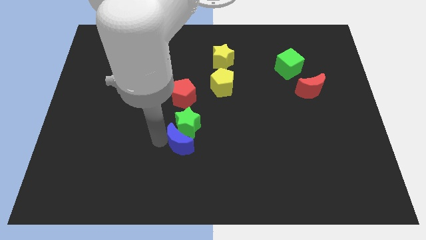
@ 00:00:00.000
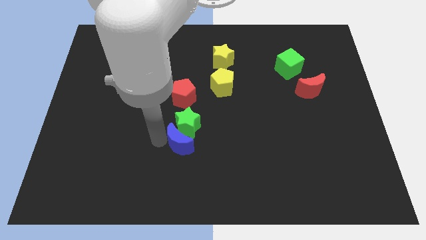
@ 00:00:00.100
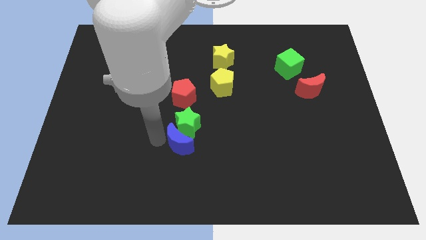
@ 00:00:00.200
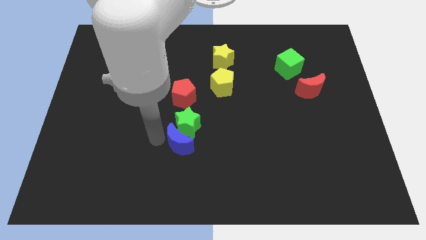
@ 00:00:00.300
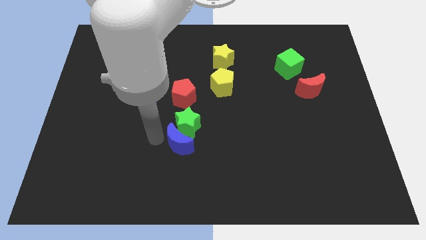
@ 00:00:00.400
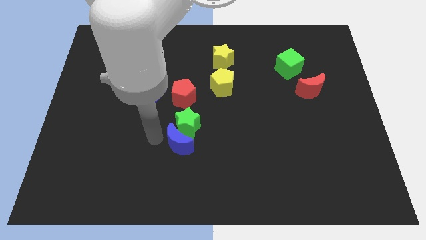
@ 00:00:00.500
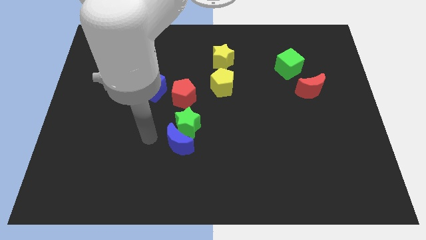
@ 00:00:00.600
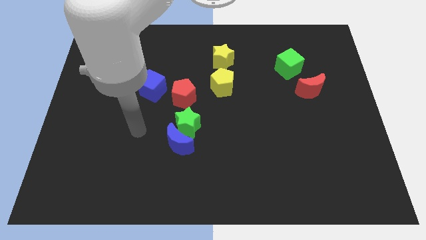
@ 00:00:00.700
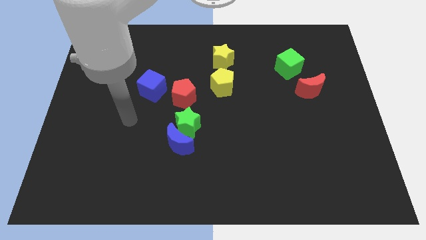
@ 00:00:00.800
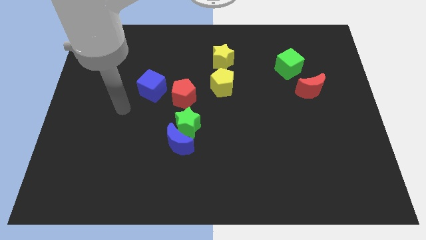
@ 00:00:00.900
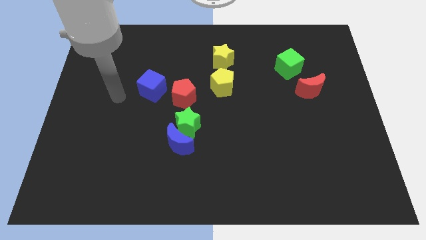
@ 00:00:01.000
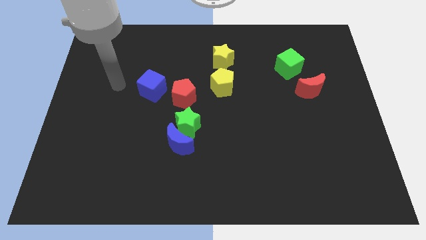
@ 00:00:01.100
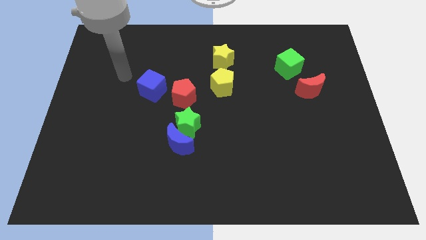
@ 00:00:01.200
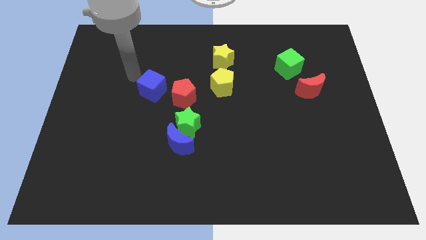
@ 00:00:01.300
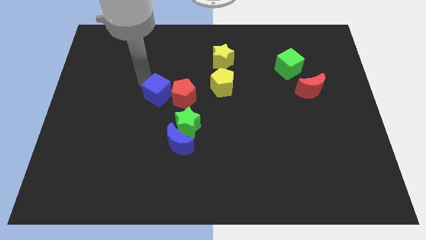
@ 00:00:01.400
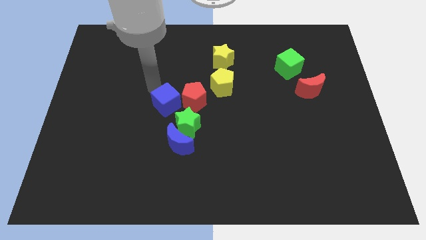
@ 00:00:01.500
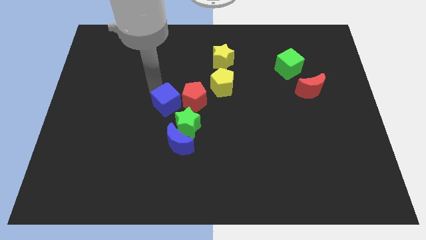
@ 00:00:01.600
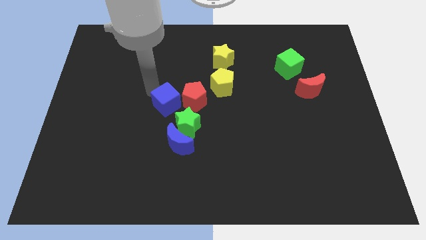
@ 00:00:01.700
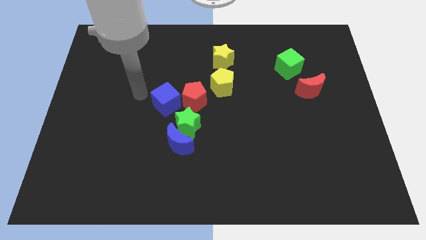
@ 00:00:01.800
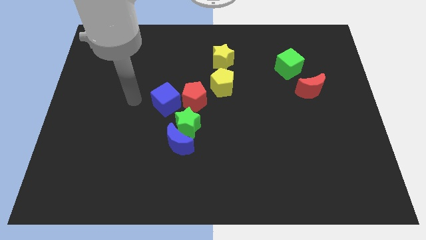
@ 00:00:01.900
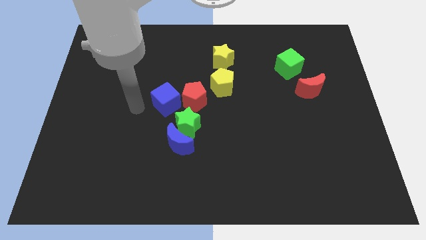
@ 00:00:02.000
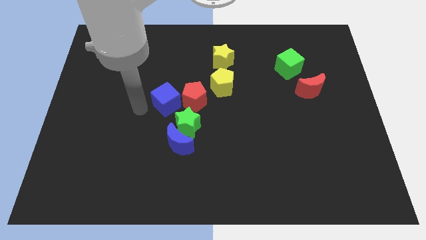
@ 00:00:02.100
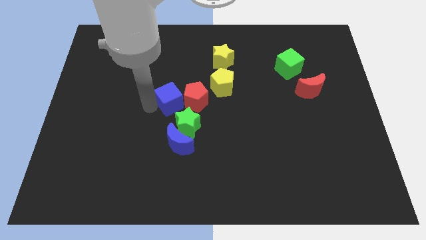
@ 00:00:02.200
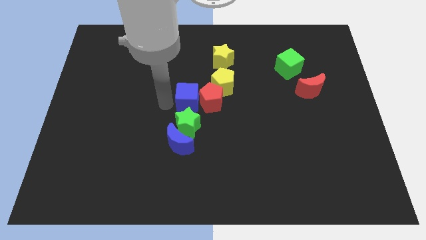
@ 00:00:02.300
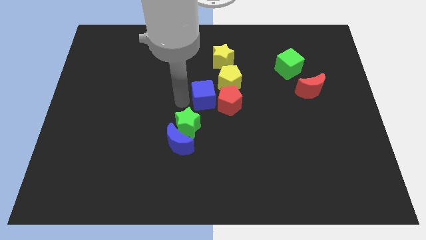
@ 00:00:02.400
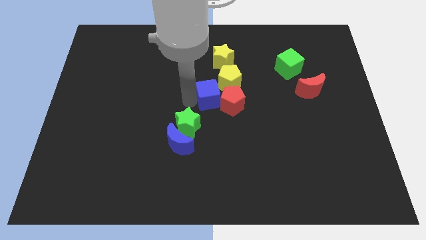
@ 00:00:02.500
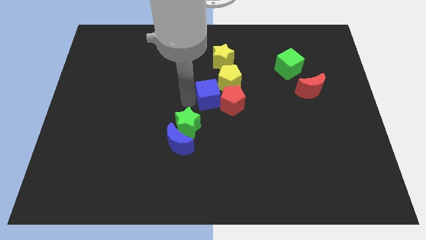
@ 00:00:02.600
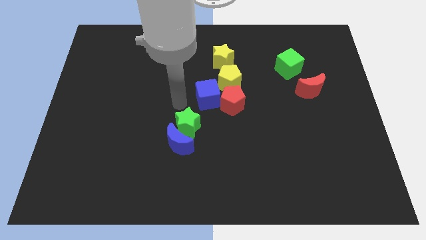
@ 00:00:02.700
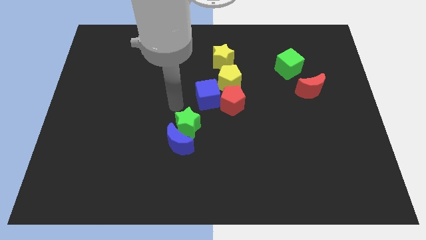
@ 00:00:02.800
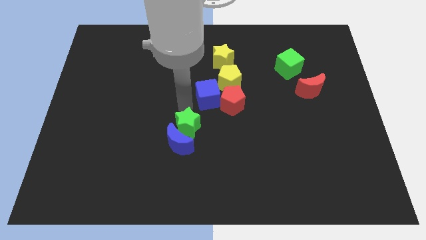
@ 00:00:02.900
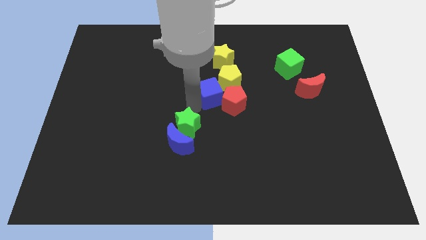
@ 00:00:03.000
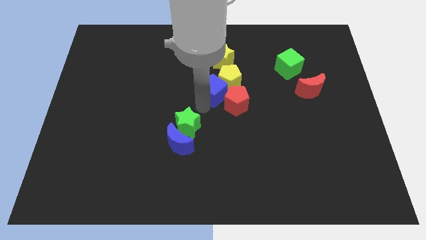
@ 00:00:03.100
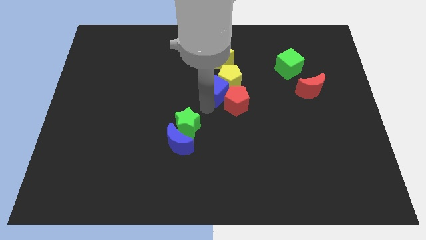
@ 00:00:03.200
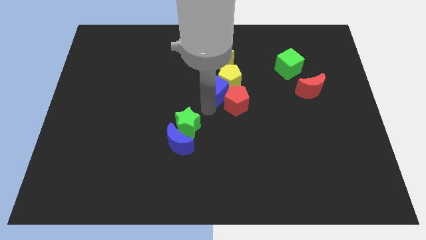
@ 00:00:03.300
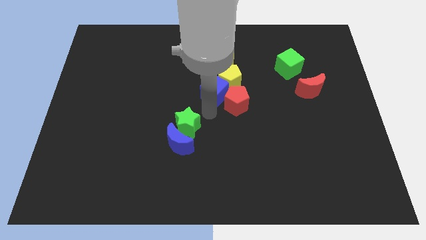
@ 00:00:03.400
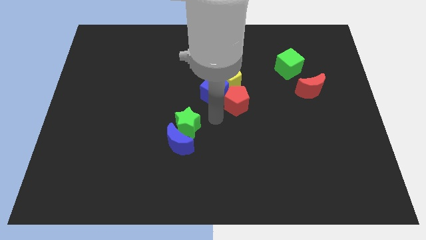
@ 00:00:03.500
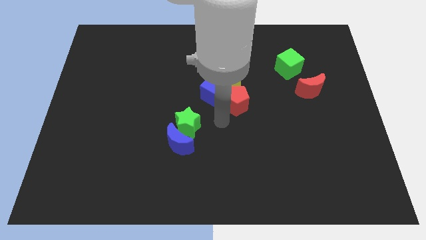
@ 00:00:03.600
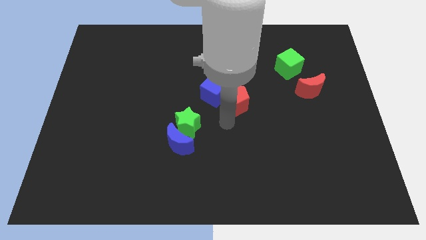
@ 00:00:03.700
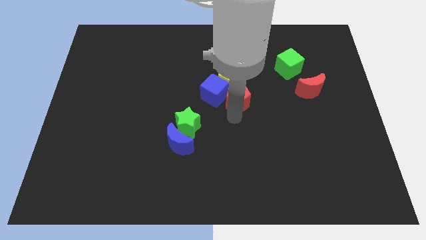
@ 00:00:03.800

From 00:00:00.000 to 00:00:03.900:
push the blue cube into the red pentagon

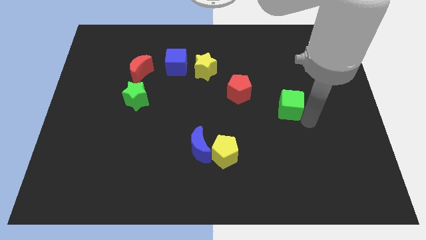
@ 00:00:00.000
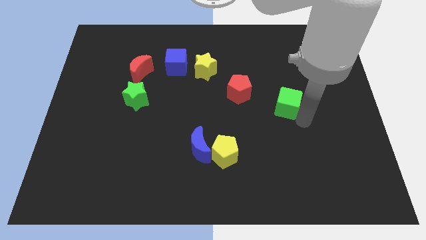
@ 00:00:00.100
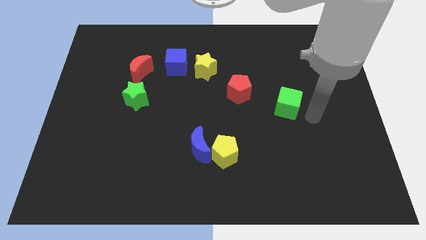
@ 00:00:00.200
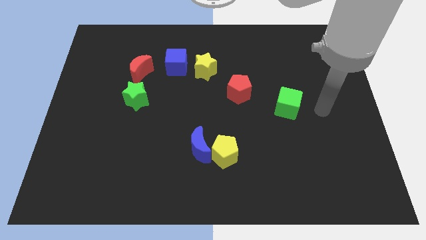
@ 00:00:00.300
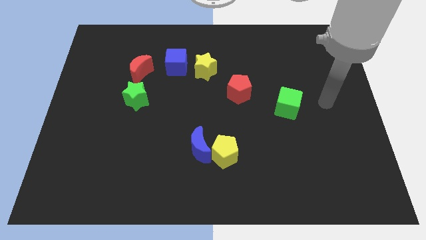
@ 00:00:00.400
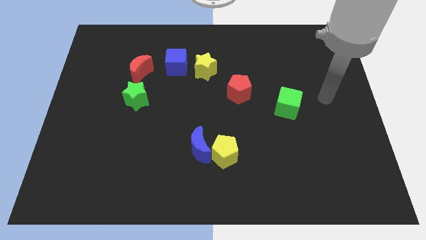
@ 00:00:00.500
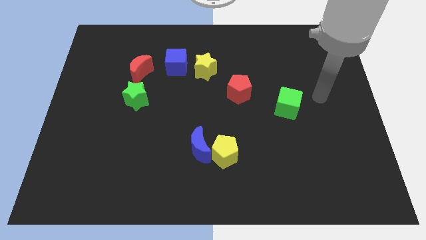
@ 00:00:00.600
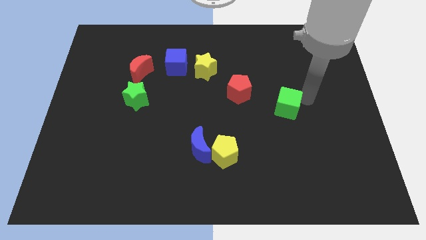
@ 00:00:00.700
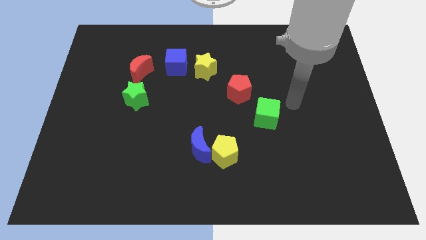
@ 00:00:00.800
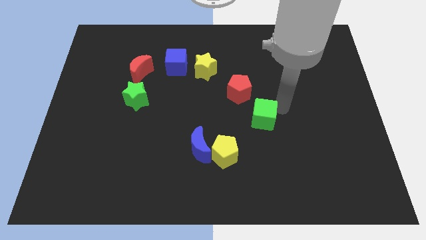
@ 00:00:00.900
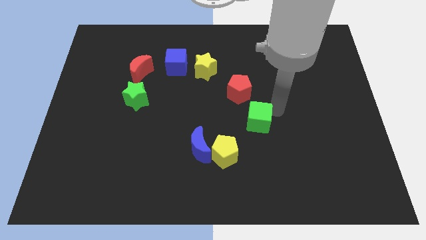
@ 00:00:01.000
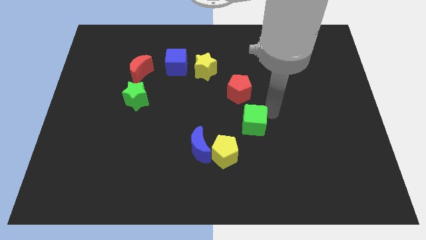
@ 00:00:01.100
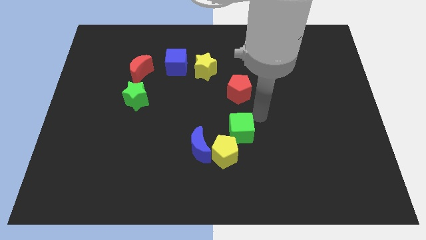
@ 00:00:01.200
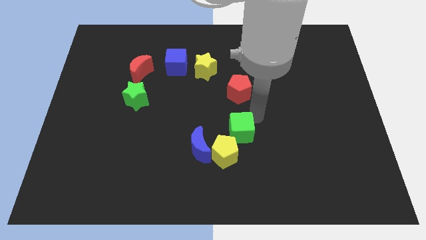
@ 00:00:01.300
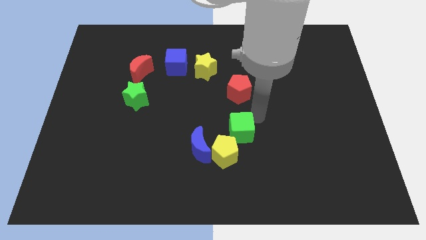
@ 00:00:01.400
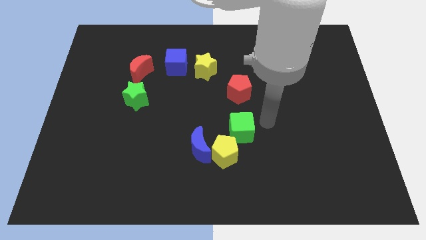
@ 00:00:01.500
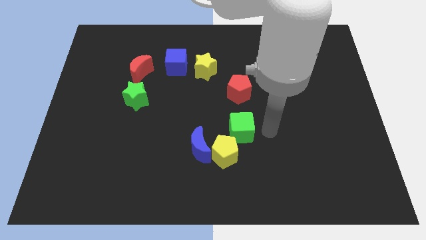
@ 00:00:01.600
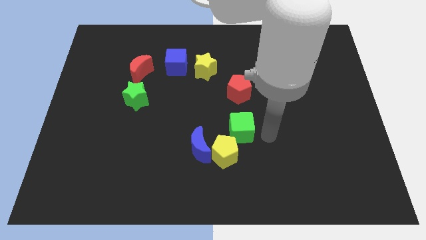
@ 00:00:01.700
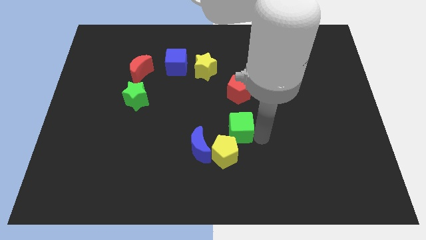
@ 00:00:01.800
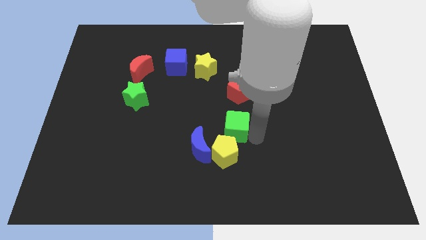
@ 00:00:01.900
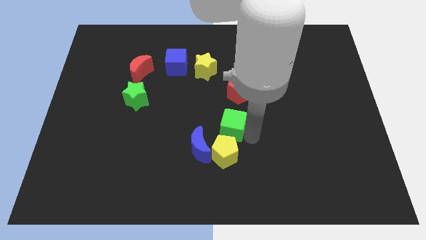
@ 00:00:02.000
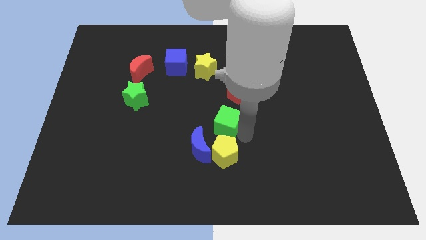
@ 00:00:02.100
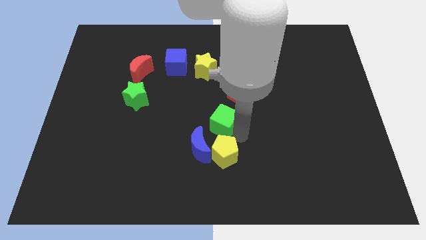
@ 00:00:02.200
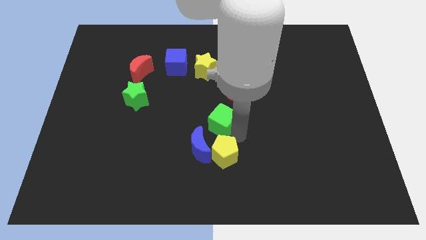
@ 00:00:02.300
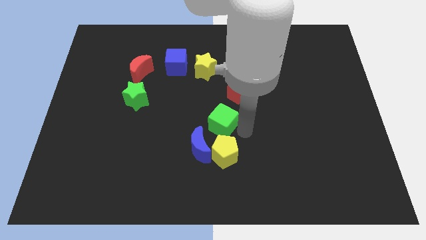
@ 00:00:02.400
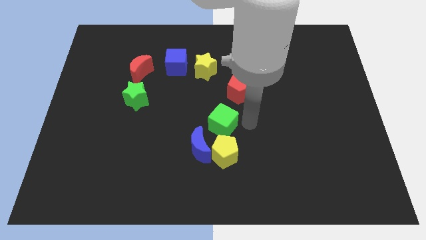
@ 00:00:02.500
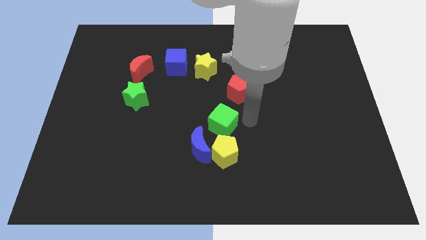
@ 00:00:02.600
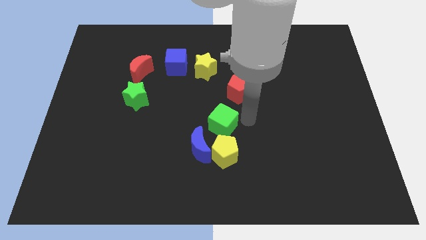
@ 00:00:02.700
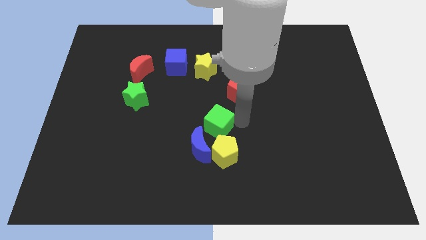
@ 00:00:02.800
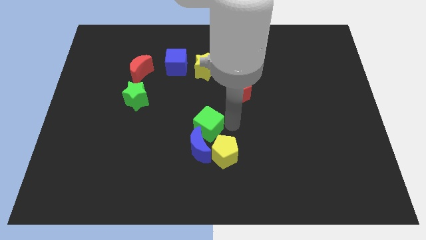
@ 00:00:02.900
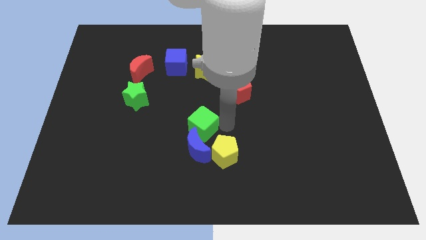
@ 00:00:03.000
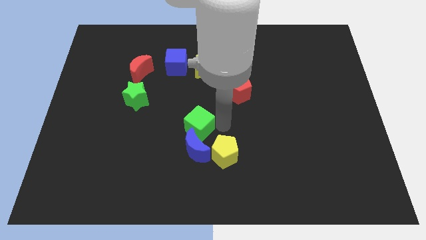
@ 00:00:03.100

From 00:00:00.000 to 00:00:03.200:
move the green star into the blue crescent

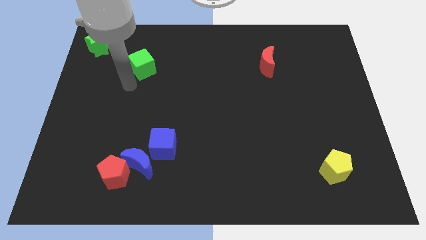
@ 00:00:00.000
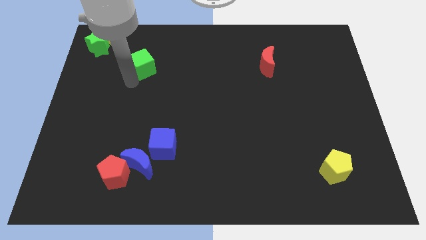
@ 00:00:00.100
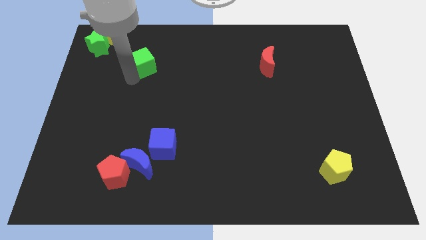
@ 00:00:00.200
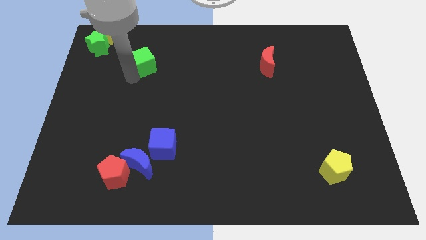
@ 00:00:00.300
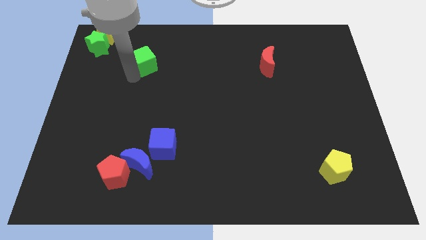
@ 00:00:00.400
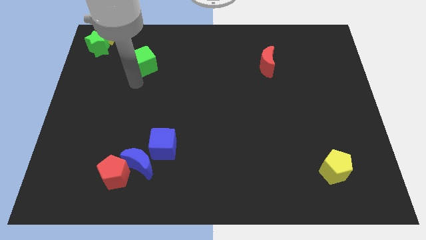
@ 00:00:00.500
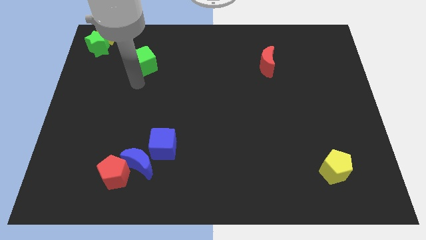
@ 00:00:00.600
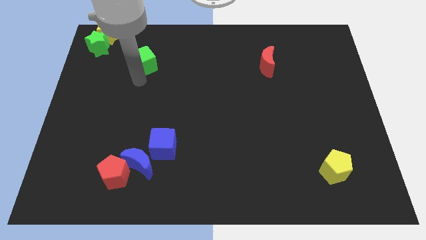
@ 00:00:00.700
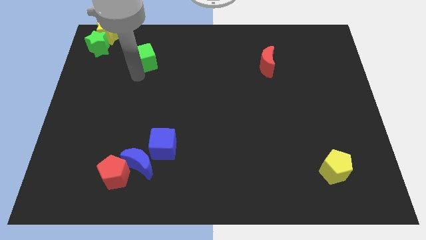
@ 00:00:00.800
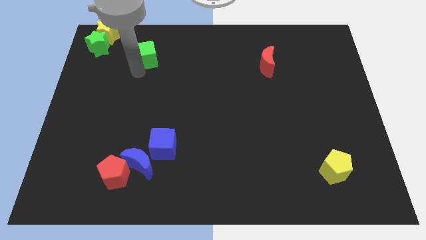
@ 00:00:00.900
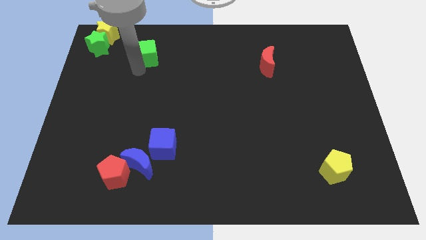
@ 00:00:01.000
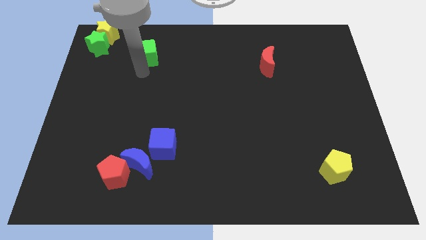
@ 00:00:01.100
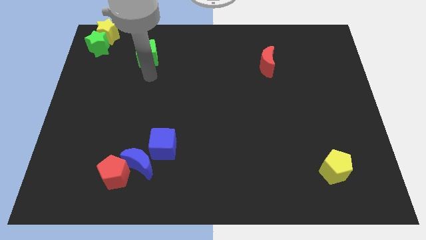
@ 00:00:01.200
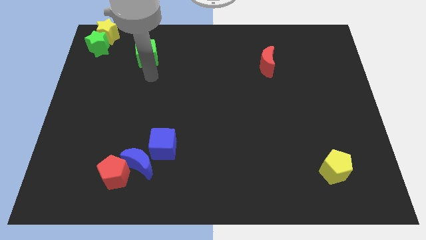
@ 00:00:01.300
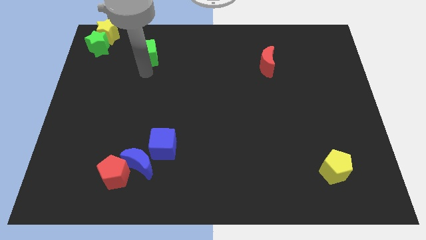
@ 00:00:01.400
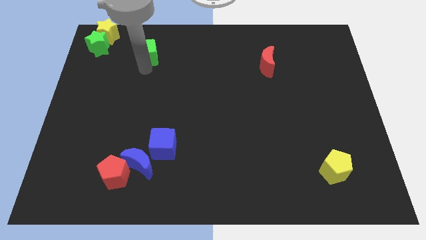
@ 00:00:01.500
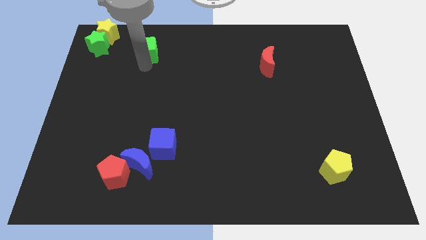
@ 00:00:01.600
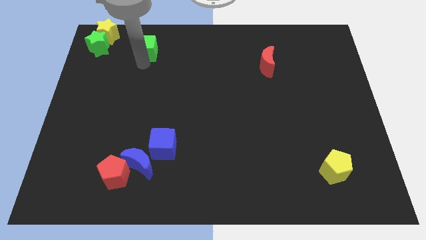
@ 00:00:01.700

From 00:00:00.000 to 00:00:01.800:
push the green cube to the right side of the green star
